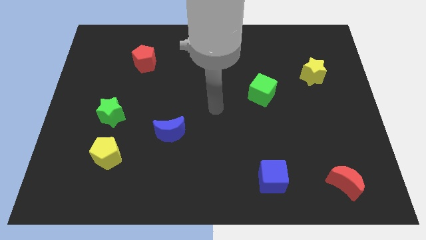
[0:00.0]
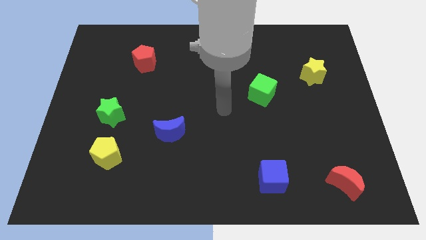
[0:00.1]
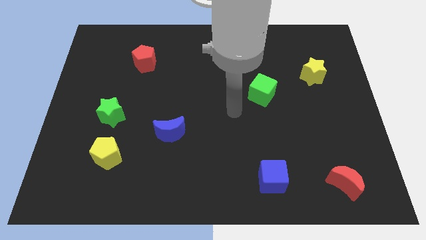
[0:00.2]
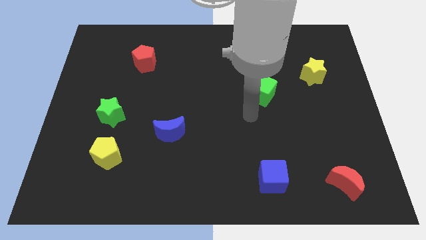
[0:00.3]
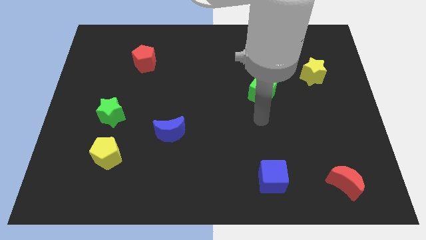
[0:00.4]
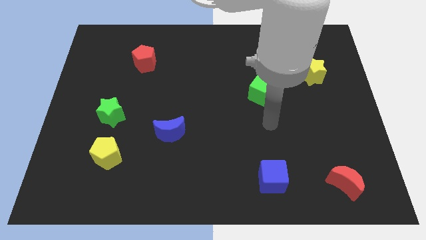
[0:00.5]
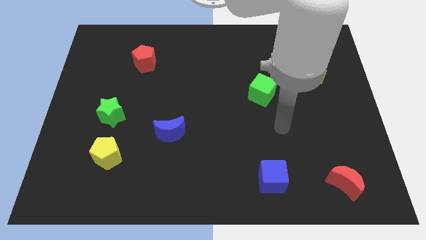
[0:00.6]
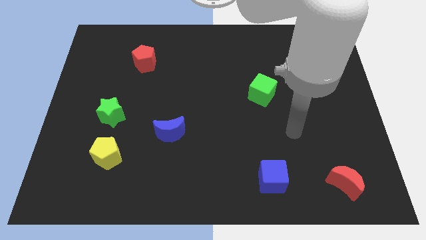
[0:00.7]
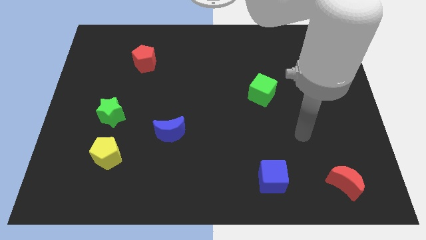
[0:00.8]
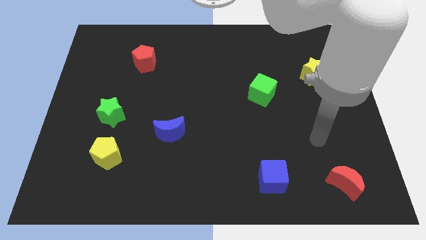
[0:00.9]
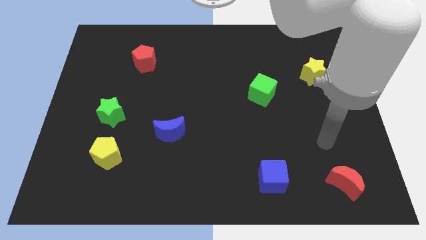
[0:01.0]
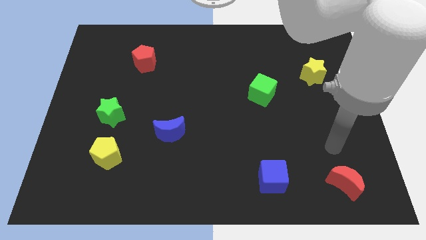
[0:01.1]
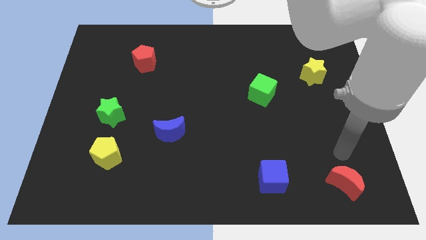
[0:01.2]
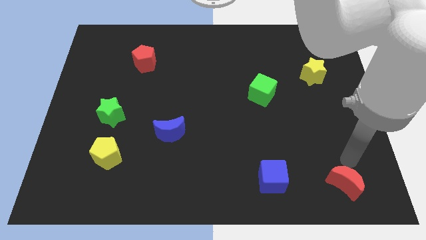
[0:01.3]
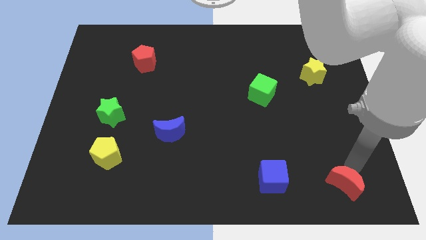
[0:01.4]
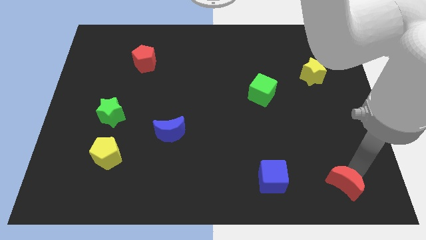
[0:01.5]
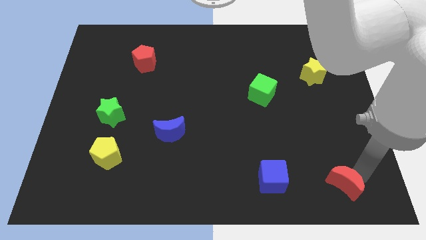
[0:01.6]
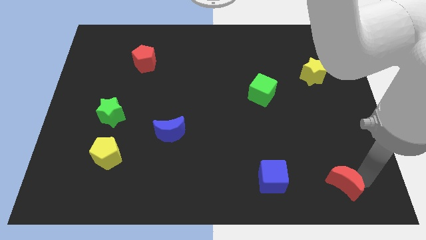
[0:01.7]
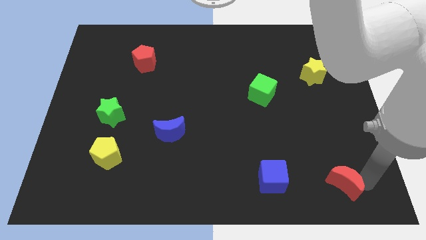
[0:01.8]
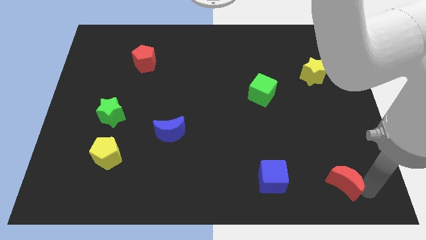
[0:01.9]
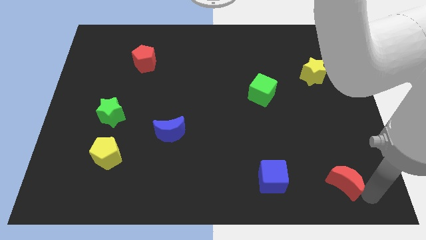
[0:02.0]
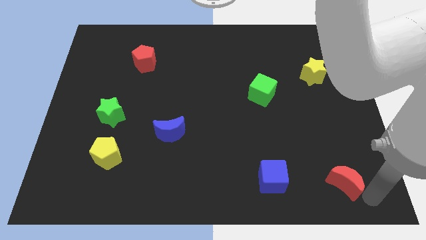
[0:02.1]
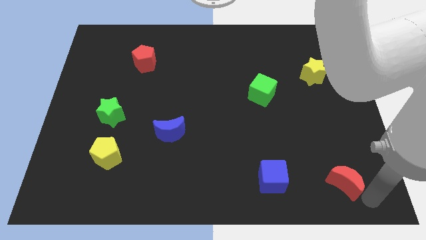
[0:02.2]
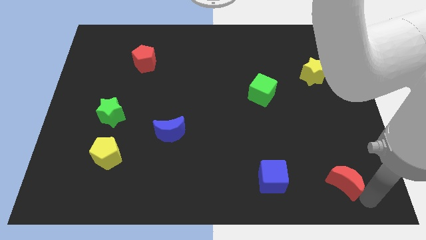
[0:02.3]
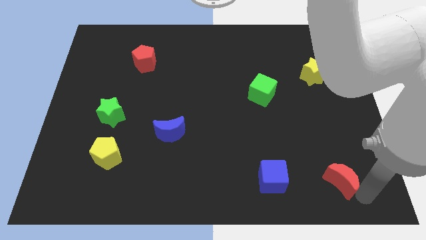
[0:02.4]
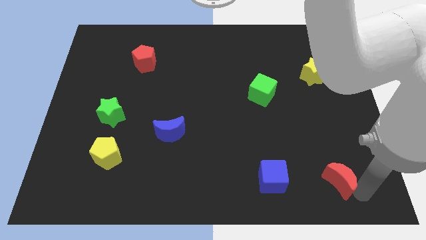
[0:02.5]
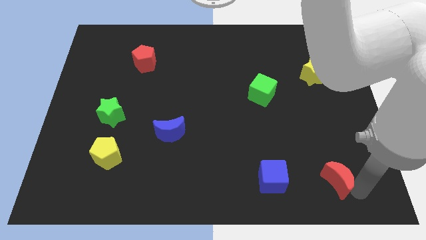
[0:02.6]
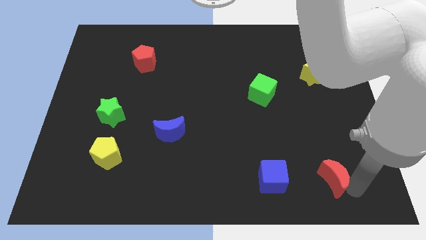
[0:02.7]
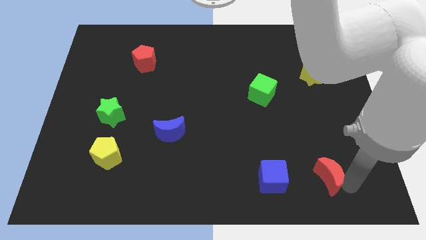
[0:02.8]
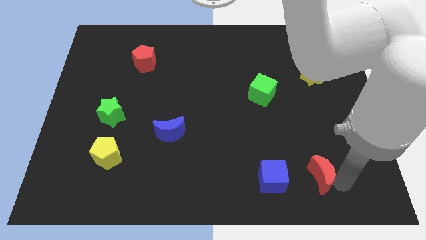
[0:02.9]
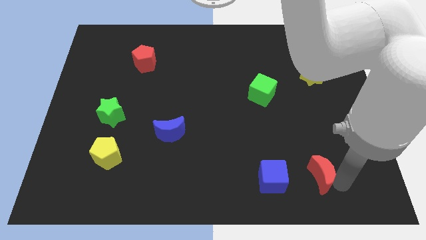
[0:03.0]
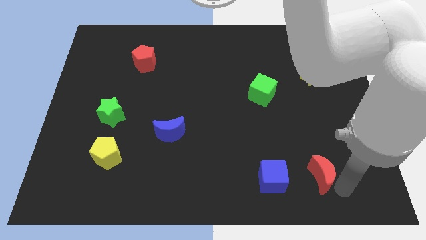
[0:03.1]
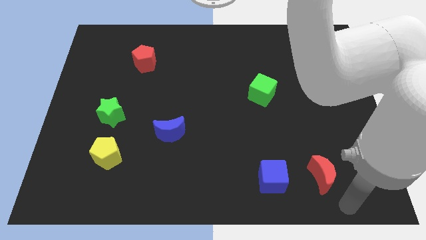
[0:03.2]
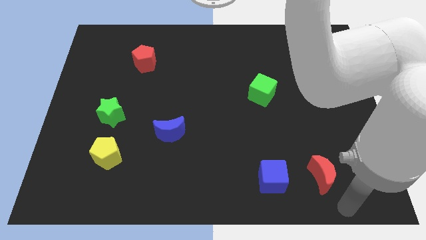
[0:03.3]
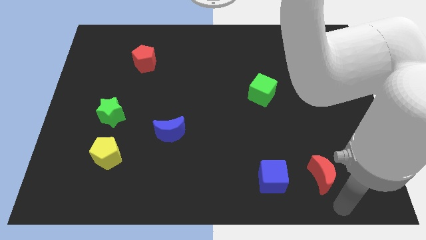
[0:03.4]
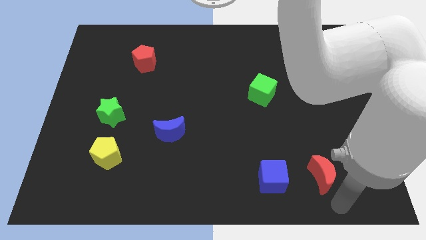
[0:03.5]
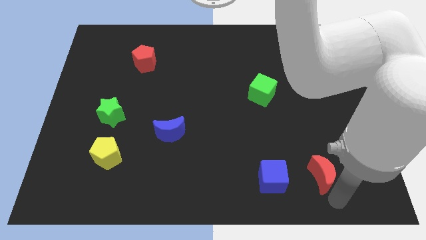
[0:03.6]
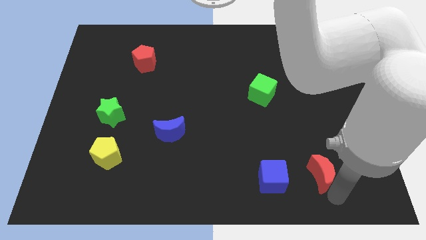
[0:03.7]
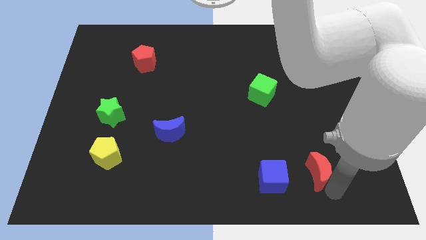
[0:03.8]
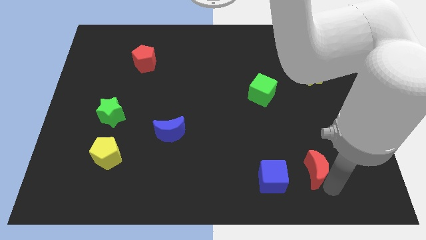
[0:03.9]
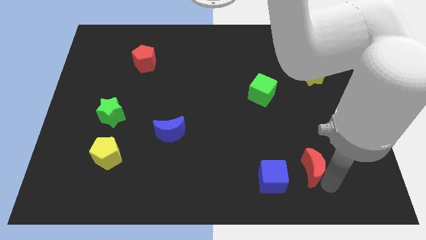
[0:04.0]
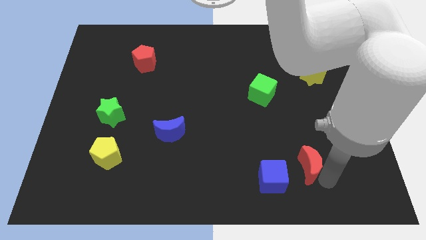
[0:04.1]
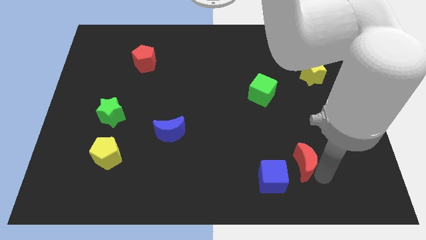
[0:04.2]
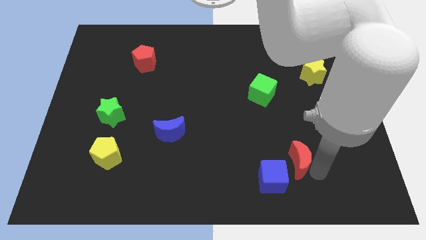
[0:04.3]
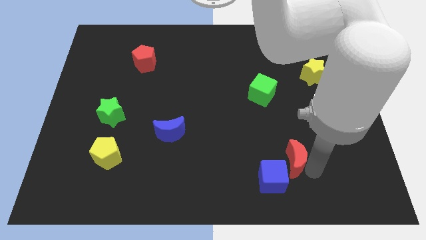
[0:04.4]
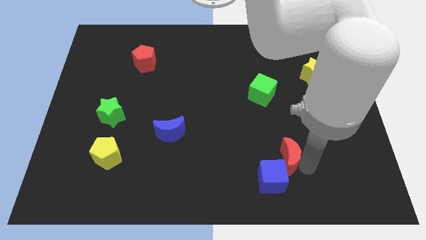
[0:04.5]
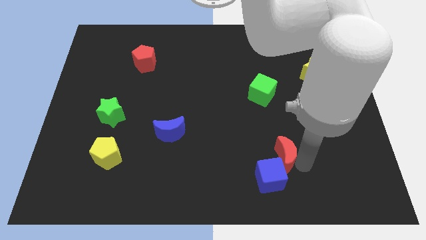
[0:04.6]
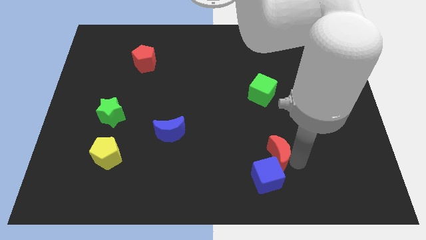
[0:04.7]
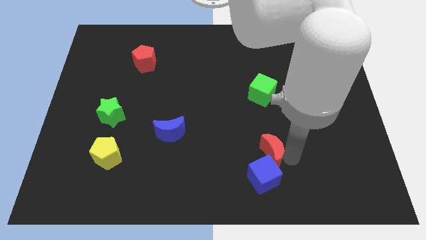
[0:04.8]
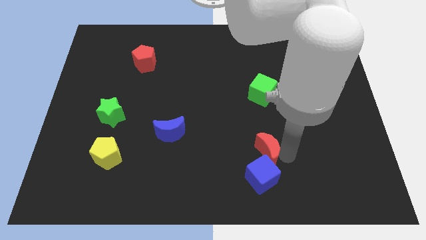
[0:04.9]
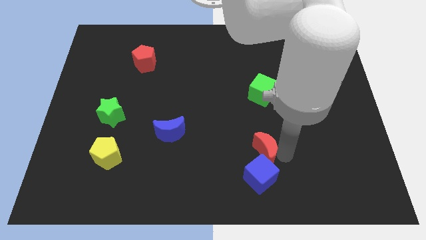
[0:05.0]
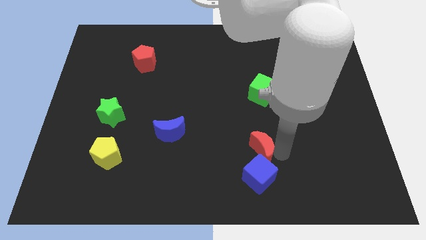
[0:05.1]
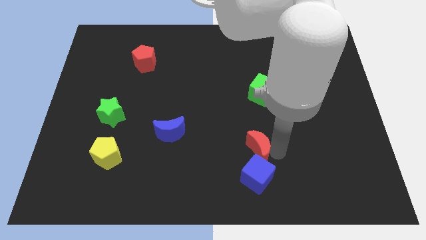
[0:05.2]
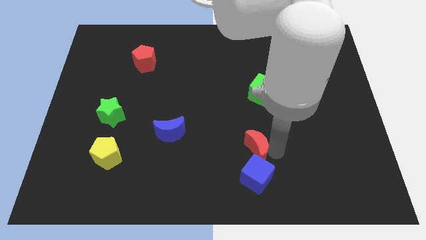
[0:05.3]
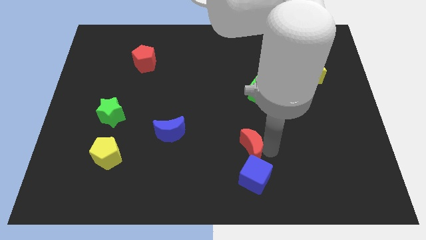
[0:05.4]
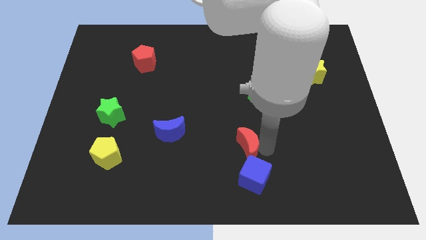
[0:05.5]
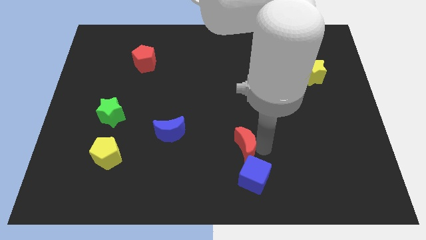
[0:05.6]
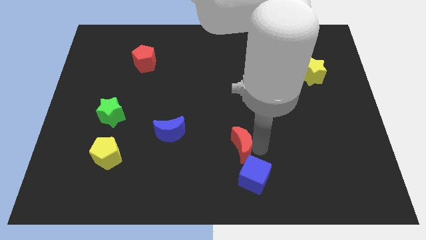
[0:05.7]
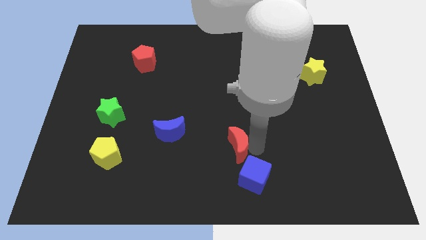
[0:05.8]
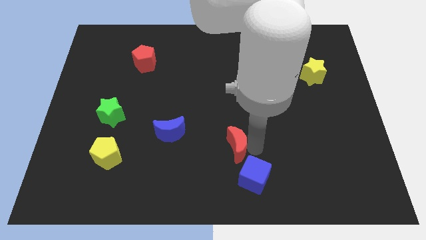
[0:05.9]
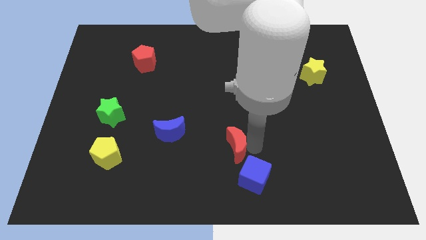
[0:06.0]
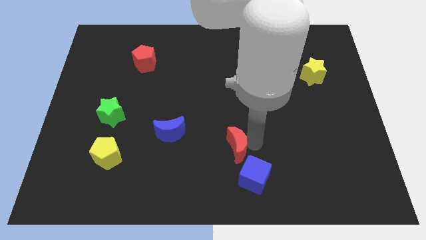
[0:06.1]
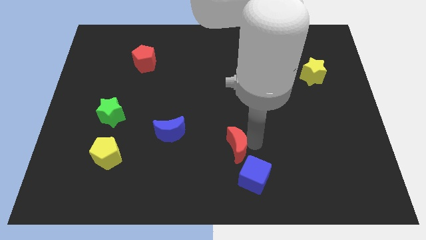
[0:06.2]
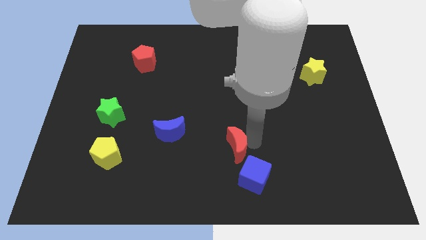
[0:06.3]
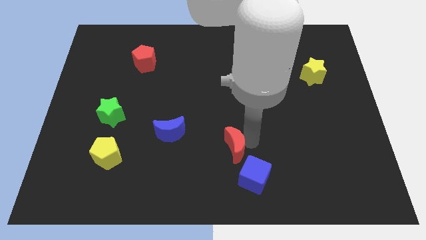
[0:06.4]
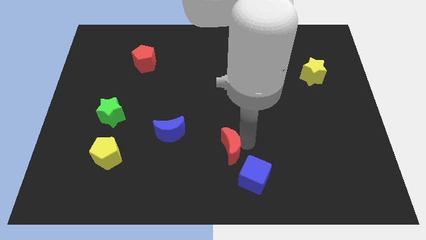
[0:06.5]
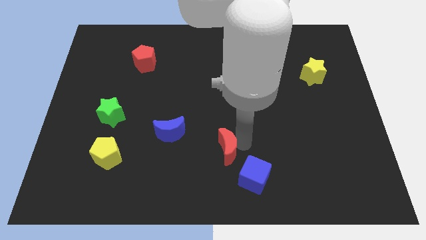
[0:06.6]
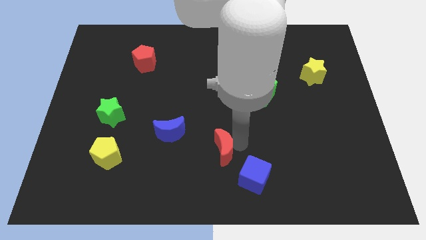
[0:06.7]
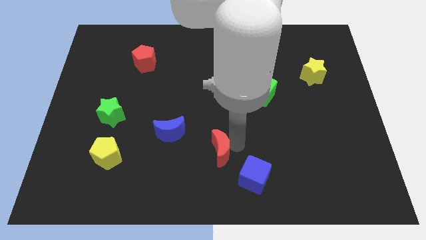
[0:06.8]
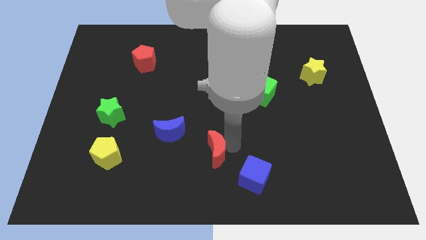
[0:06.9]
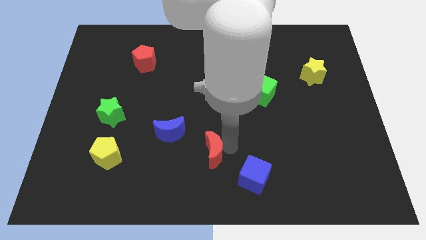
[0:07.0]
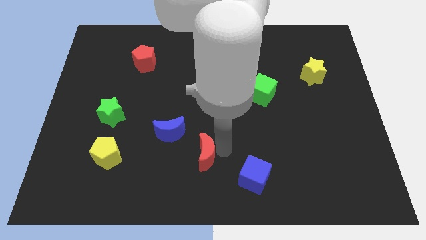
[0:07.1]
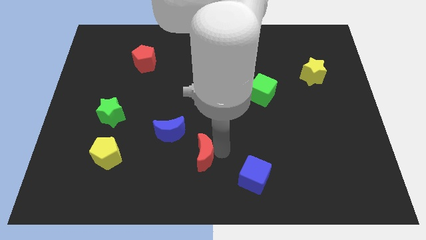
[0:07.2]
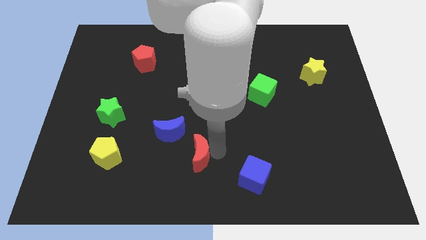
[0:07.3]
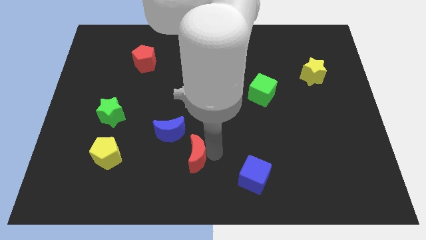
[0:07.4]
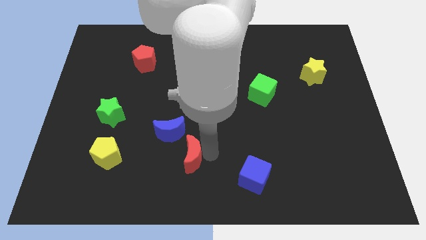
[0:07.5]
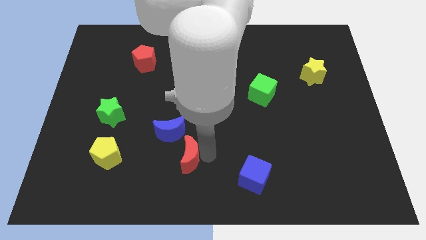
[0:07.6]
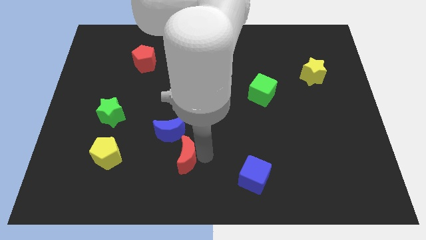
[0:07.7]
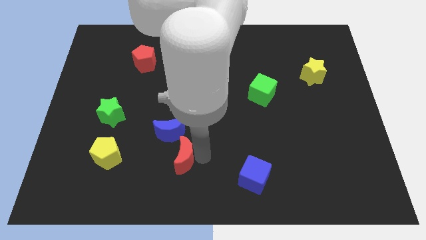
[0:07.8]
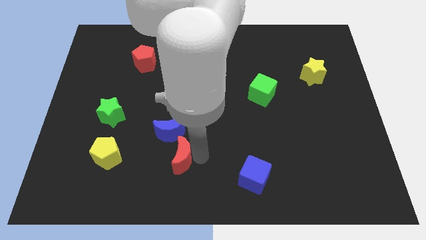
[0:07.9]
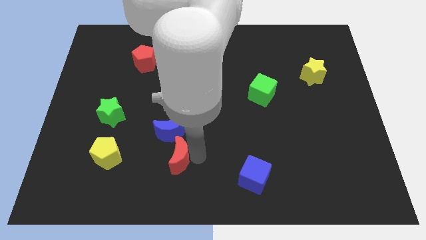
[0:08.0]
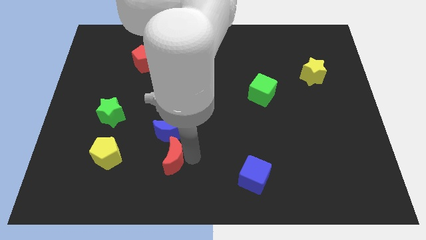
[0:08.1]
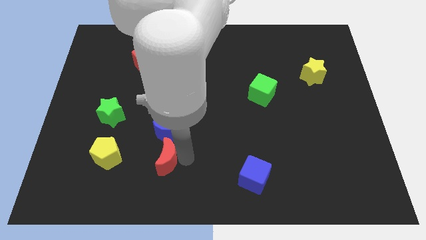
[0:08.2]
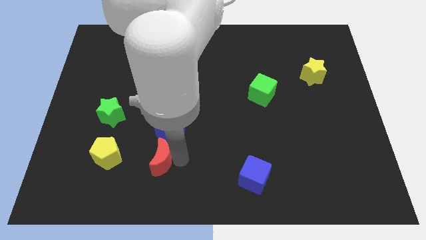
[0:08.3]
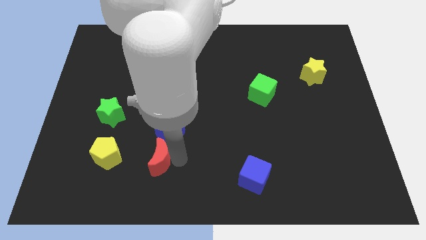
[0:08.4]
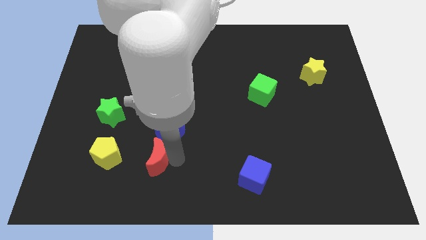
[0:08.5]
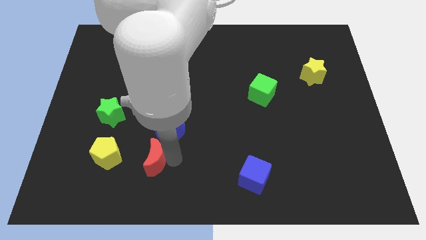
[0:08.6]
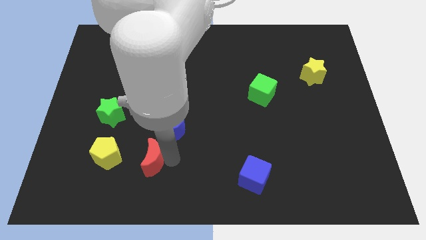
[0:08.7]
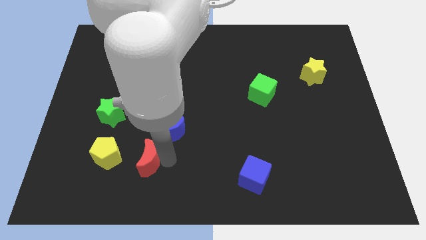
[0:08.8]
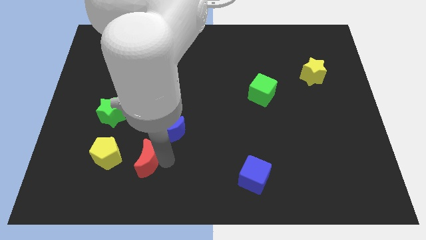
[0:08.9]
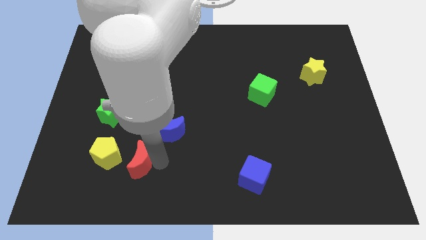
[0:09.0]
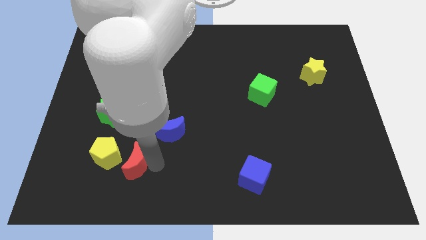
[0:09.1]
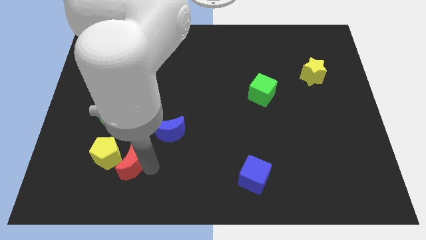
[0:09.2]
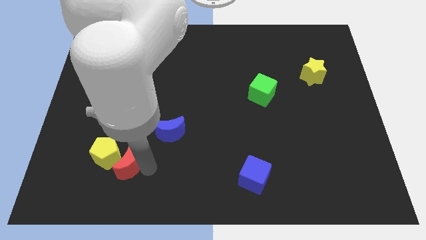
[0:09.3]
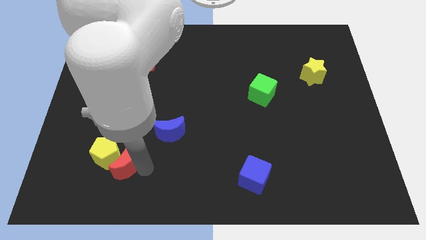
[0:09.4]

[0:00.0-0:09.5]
move the red moon next to the yellow pentagon
